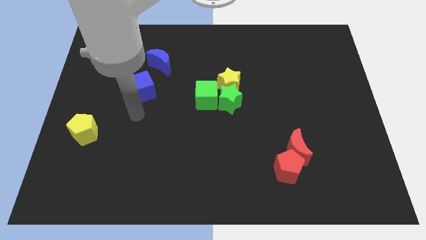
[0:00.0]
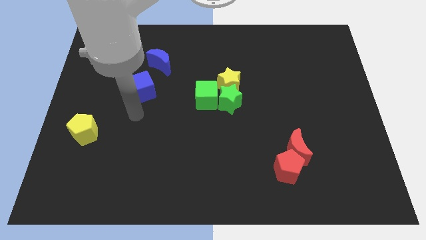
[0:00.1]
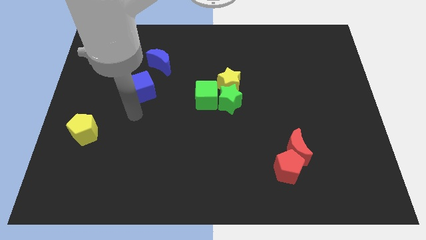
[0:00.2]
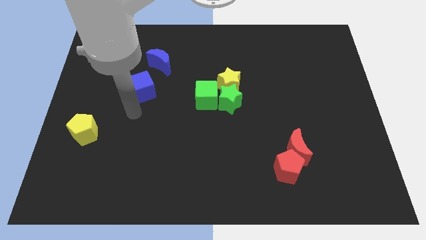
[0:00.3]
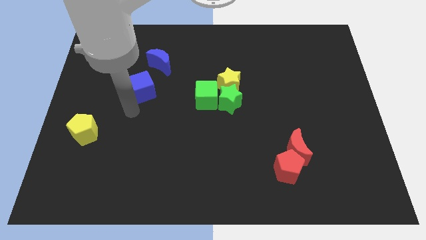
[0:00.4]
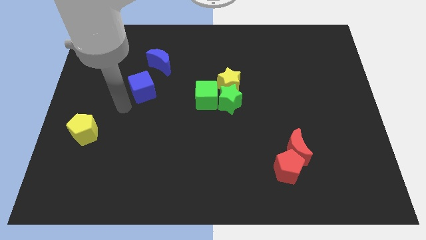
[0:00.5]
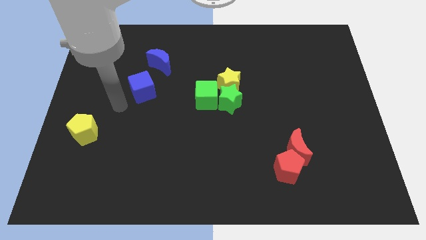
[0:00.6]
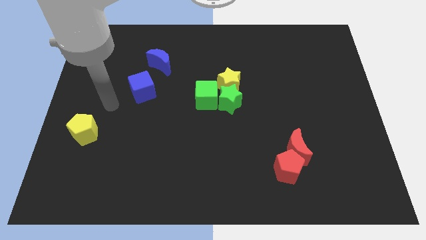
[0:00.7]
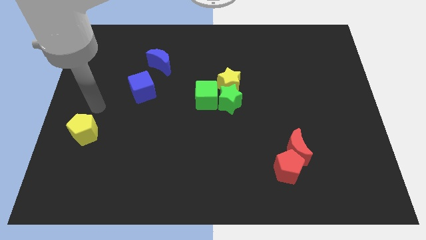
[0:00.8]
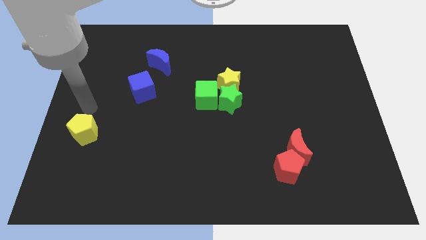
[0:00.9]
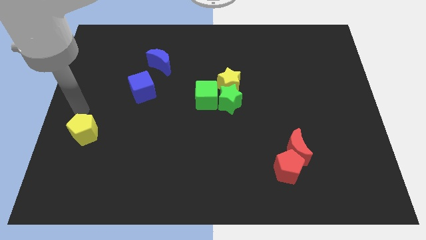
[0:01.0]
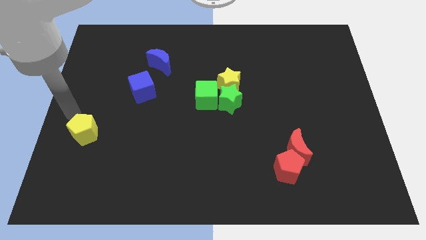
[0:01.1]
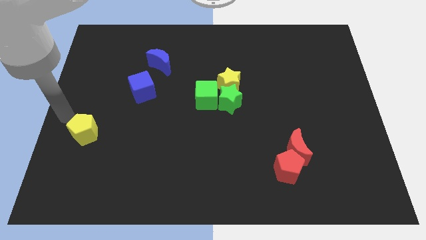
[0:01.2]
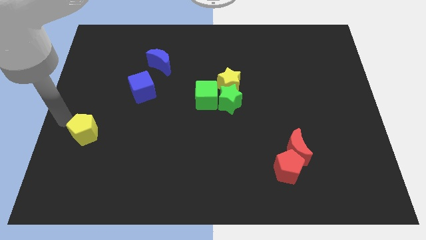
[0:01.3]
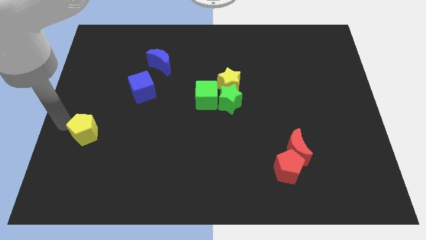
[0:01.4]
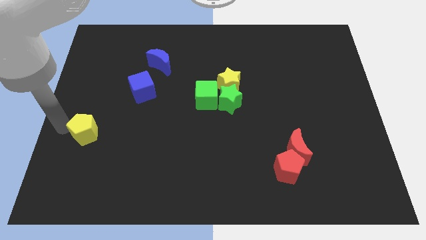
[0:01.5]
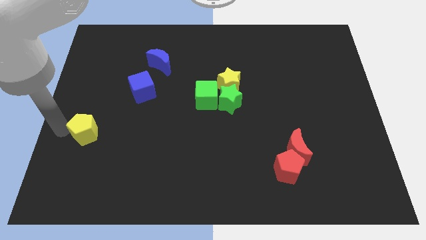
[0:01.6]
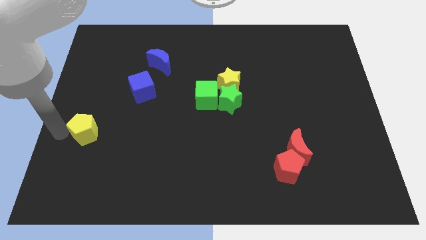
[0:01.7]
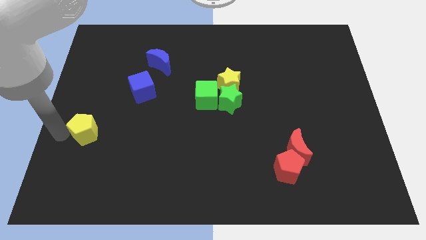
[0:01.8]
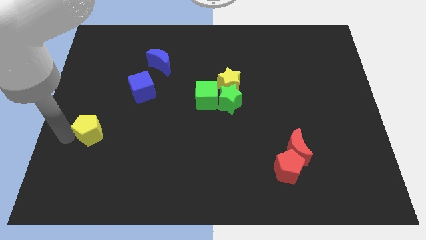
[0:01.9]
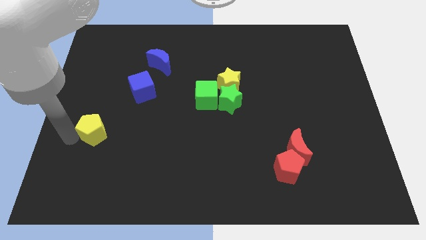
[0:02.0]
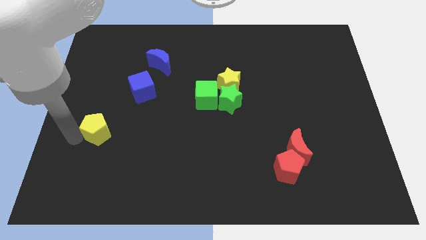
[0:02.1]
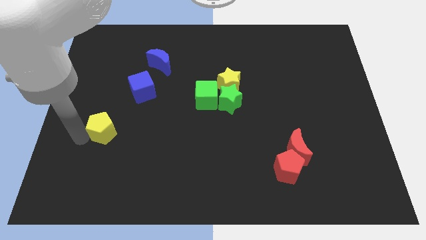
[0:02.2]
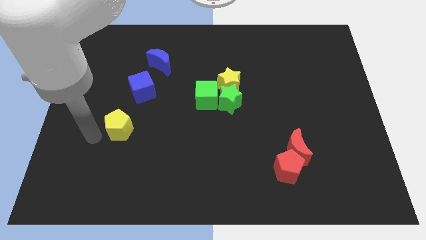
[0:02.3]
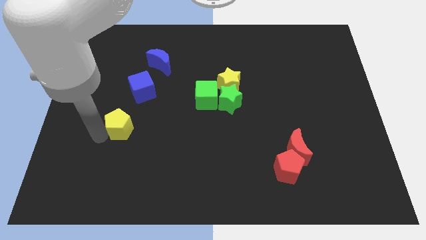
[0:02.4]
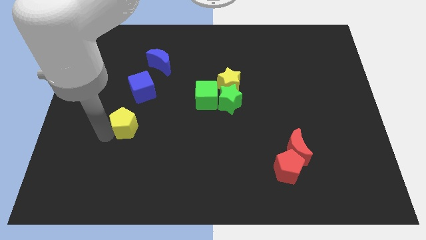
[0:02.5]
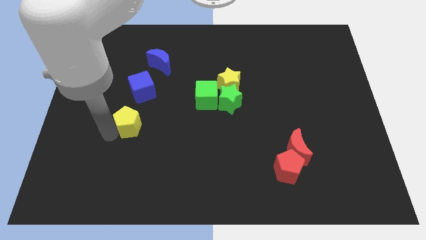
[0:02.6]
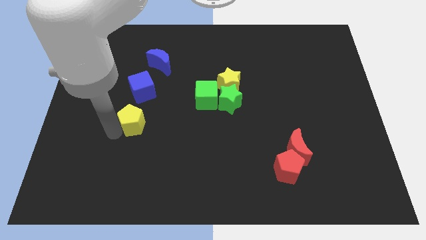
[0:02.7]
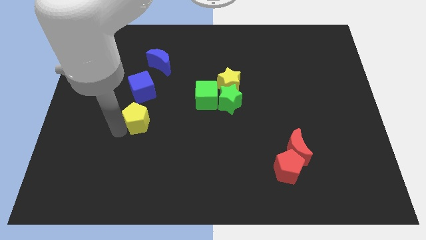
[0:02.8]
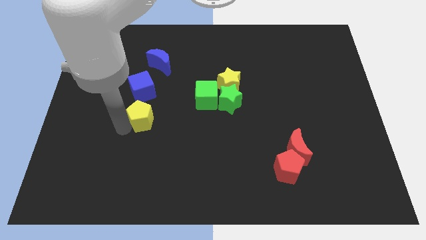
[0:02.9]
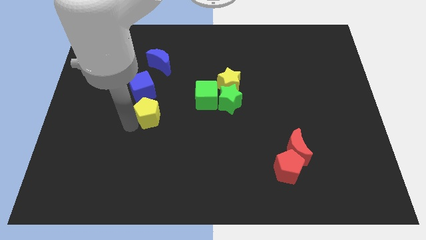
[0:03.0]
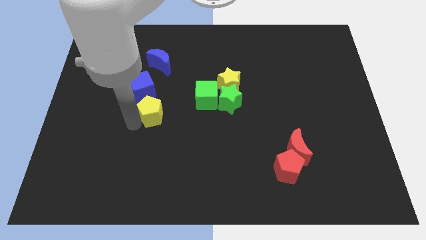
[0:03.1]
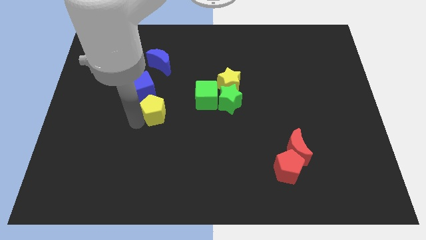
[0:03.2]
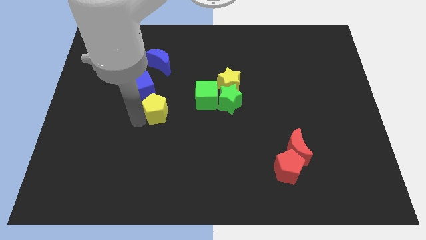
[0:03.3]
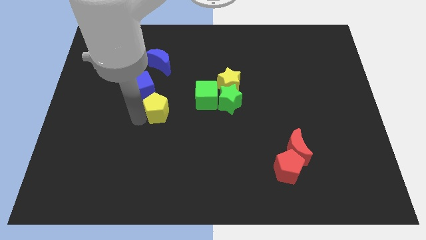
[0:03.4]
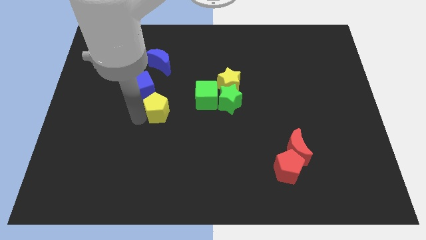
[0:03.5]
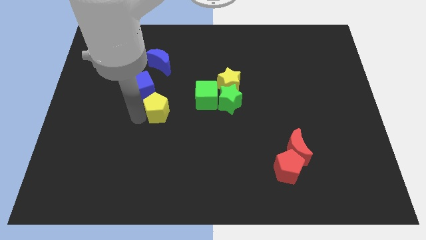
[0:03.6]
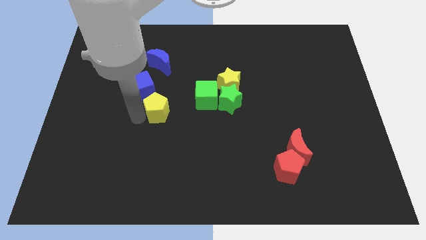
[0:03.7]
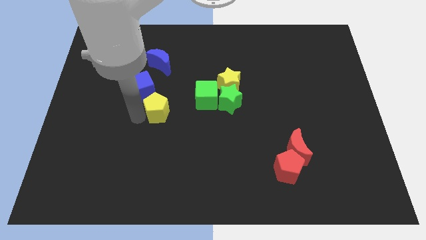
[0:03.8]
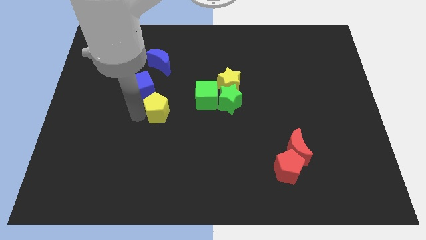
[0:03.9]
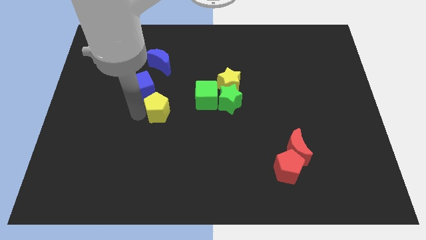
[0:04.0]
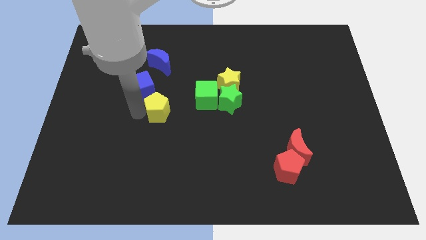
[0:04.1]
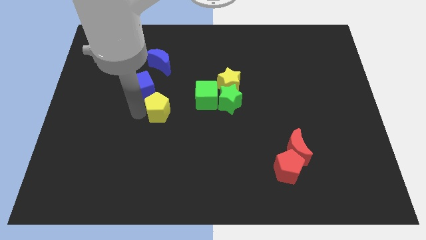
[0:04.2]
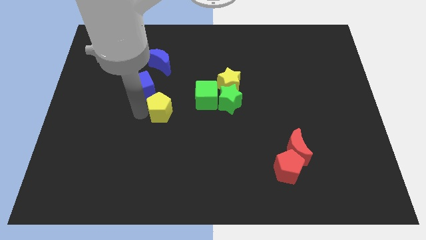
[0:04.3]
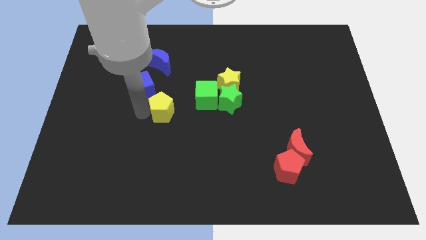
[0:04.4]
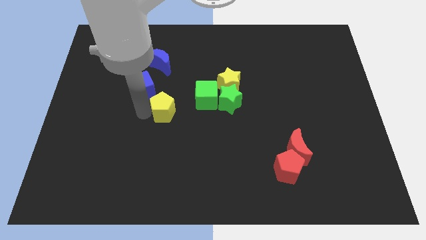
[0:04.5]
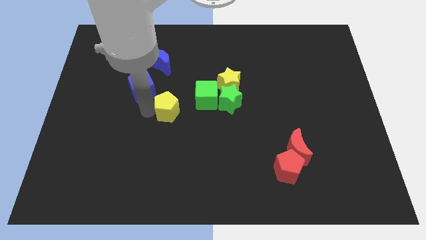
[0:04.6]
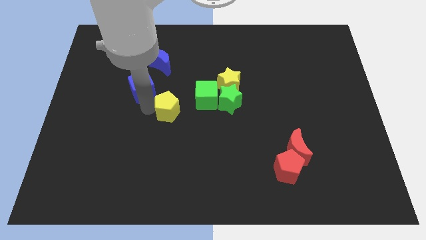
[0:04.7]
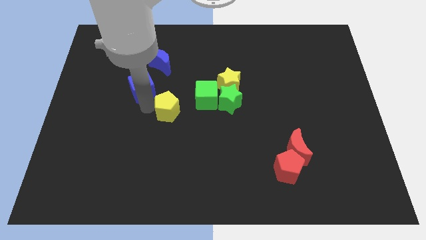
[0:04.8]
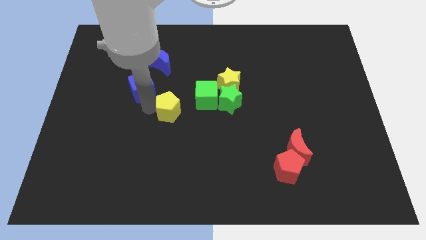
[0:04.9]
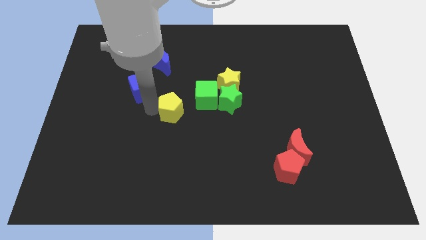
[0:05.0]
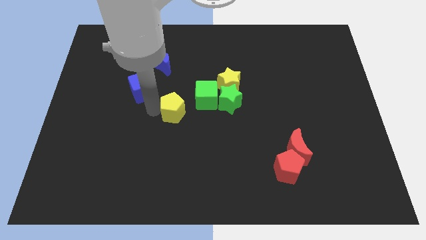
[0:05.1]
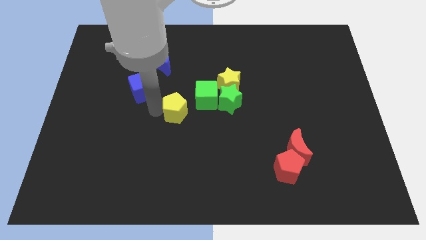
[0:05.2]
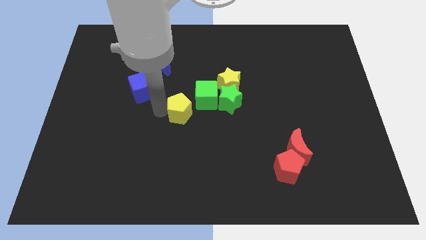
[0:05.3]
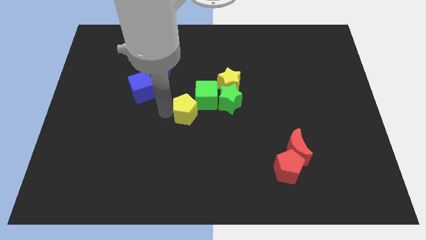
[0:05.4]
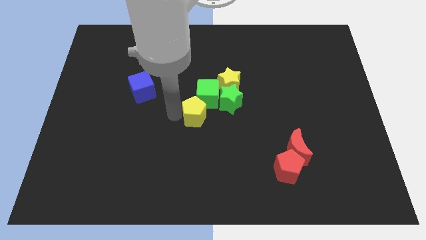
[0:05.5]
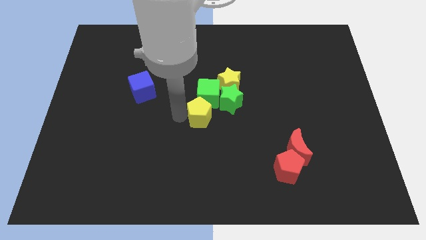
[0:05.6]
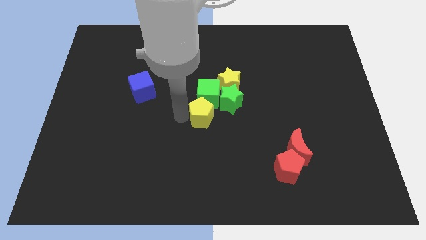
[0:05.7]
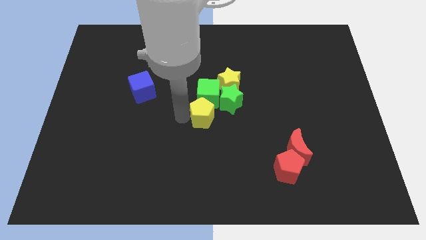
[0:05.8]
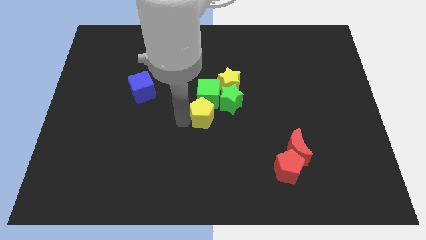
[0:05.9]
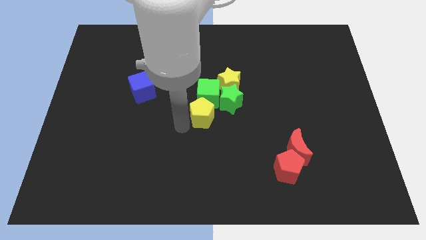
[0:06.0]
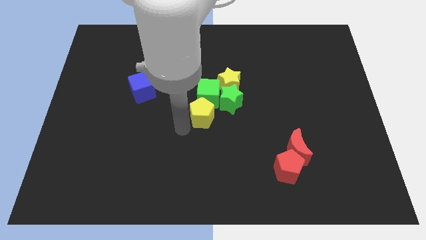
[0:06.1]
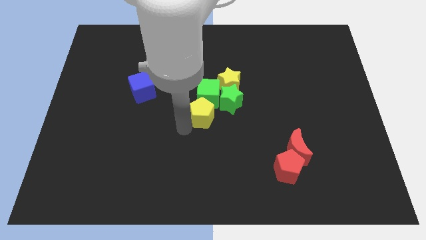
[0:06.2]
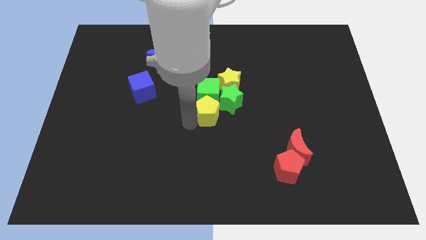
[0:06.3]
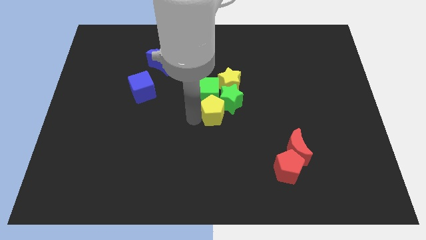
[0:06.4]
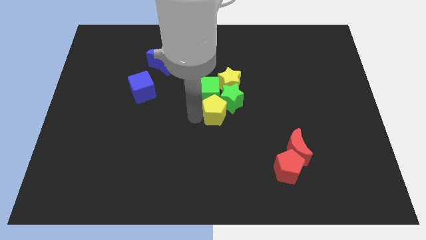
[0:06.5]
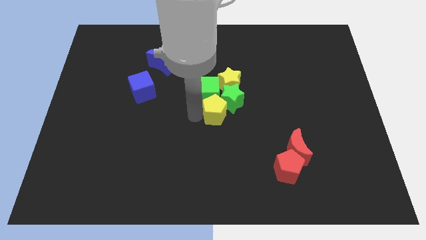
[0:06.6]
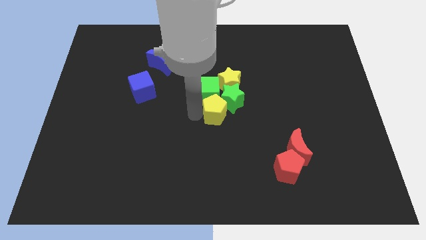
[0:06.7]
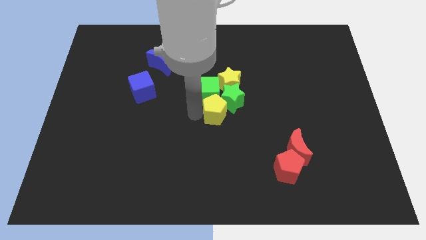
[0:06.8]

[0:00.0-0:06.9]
push the yellow pentagon into the bottom of the green star

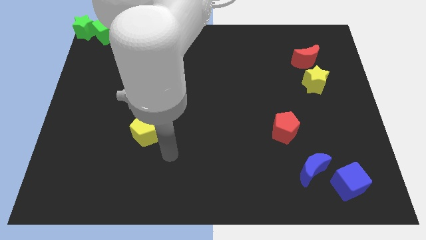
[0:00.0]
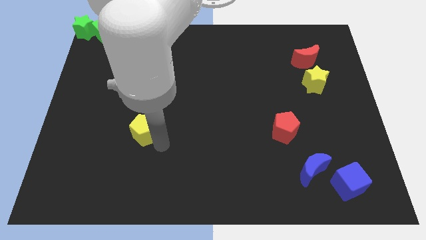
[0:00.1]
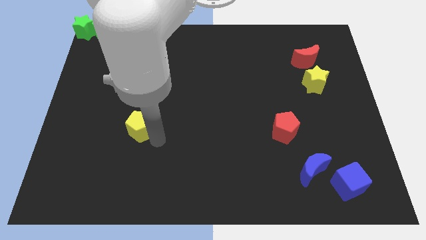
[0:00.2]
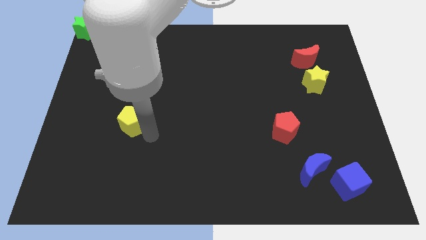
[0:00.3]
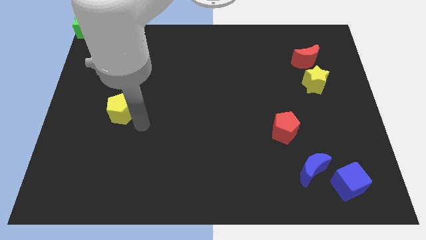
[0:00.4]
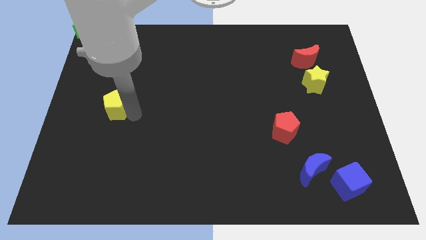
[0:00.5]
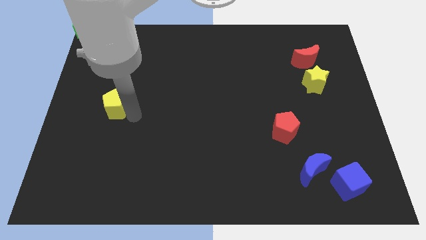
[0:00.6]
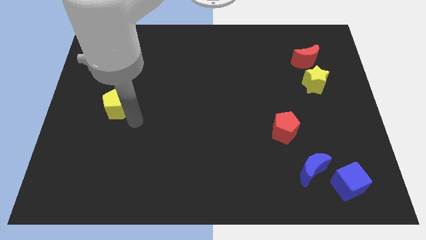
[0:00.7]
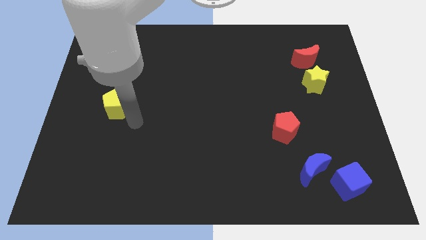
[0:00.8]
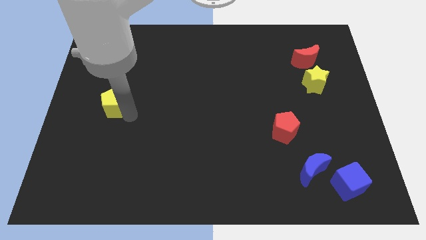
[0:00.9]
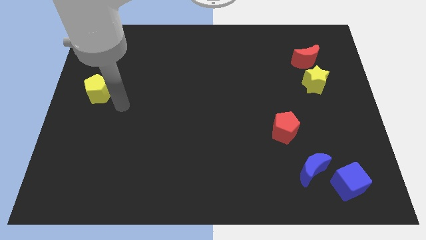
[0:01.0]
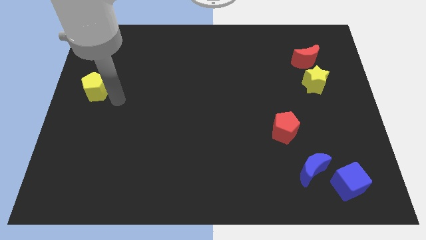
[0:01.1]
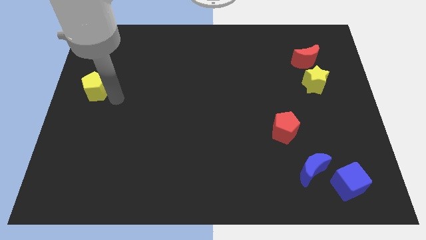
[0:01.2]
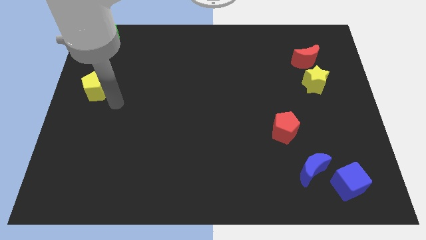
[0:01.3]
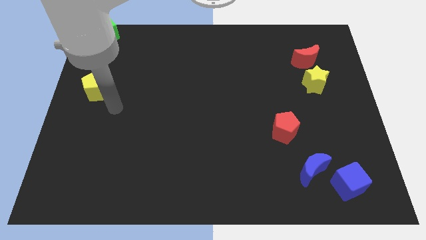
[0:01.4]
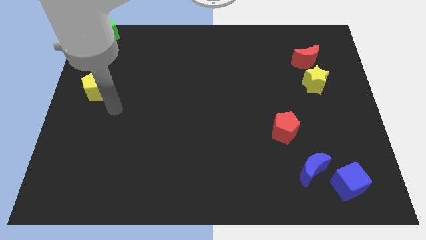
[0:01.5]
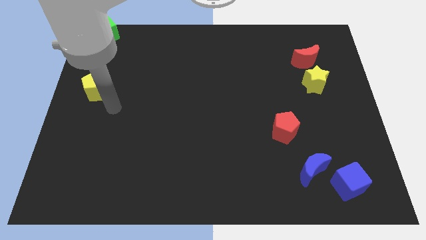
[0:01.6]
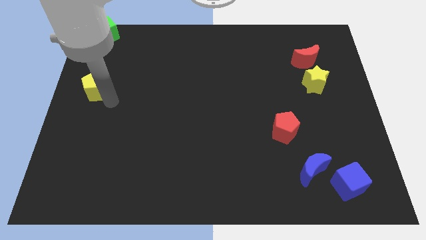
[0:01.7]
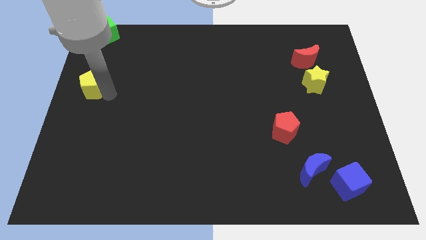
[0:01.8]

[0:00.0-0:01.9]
put the yellow pentagon vertically below the green cube

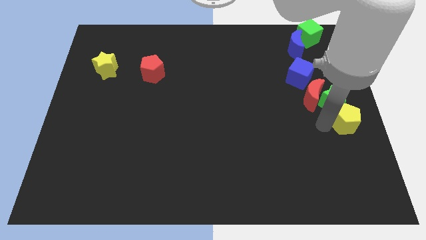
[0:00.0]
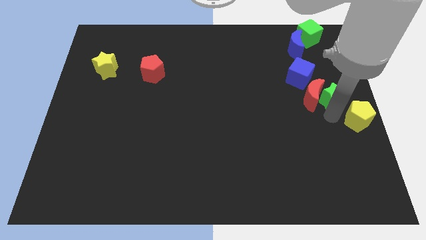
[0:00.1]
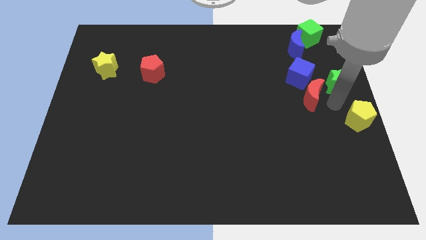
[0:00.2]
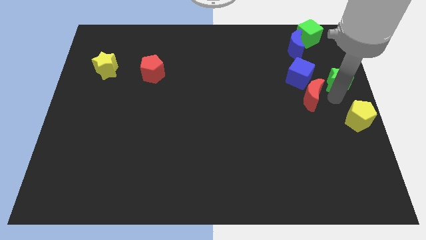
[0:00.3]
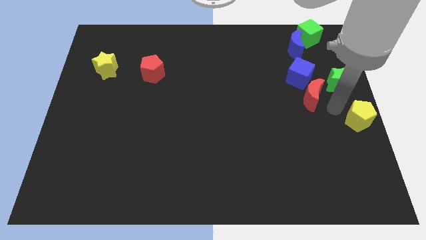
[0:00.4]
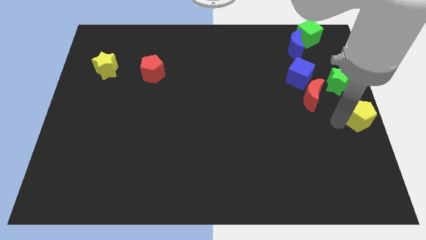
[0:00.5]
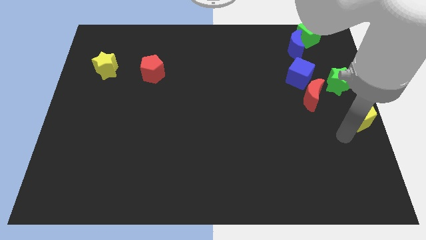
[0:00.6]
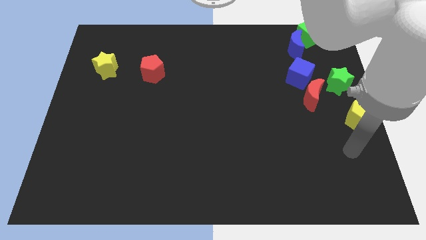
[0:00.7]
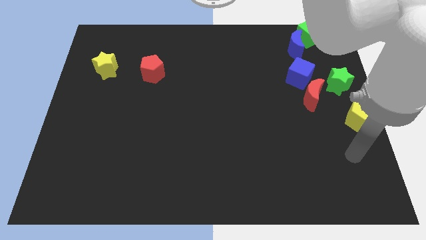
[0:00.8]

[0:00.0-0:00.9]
separate the green star from the red crescent and the yellow pentagon
